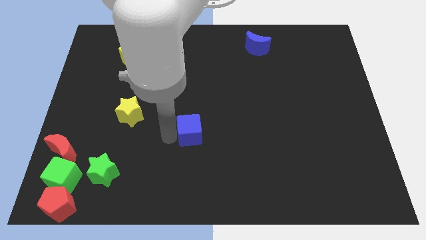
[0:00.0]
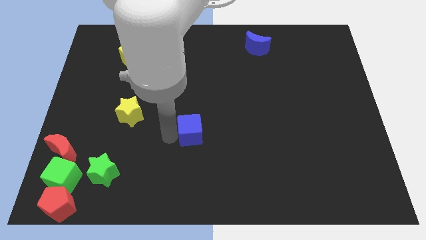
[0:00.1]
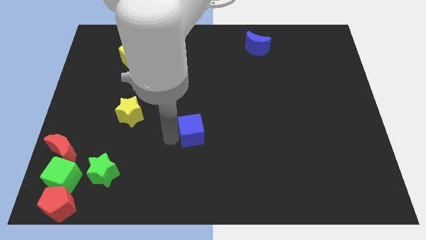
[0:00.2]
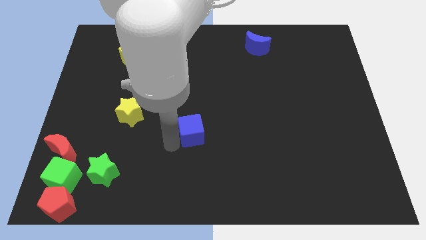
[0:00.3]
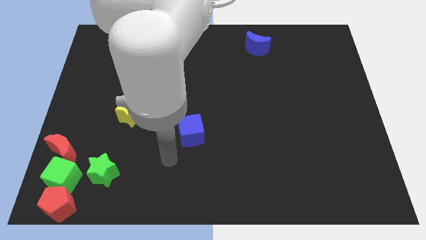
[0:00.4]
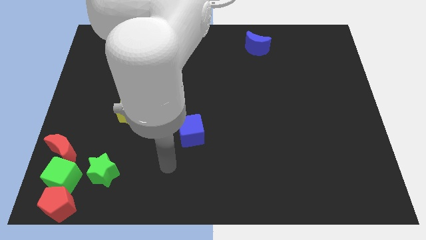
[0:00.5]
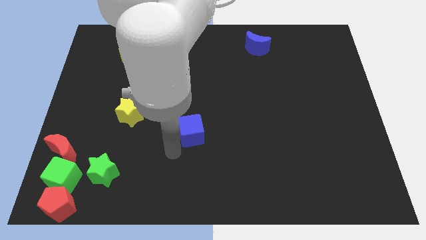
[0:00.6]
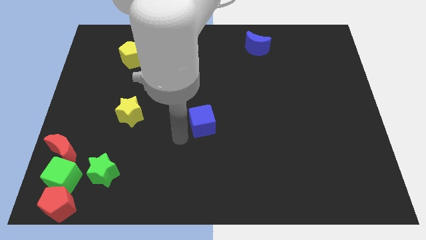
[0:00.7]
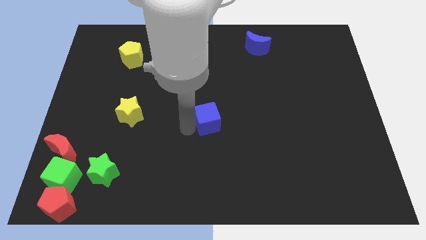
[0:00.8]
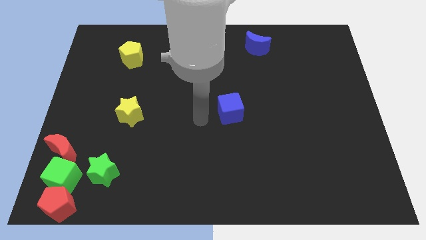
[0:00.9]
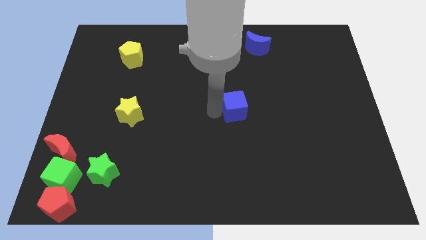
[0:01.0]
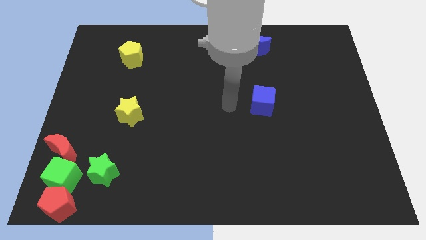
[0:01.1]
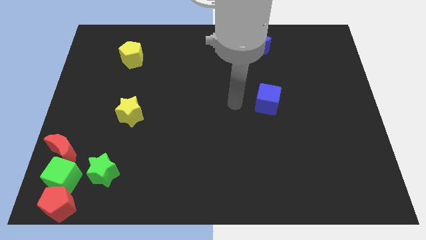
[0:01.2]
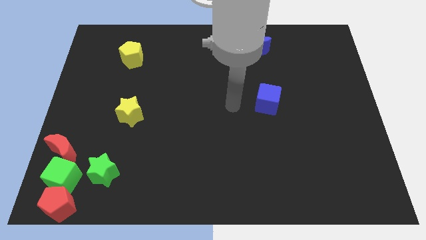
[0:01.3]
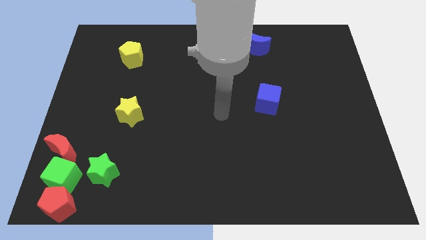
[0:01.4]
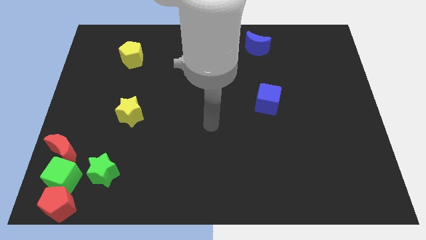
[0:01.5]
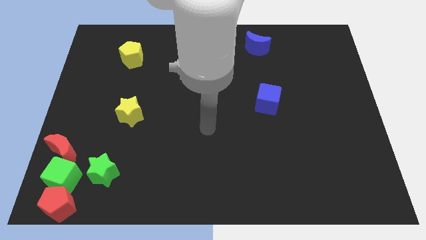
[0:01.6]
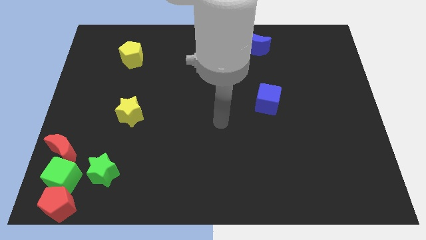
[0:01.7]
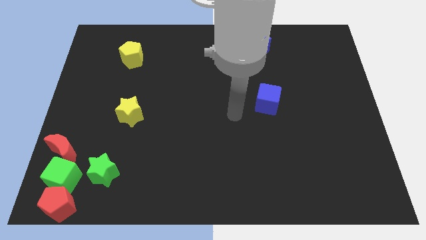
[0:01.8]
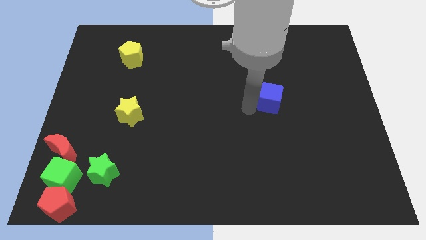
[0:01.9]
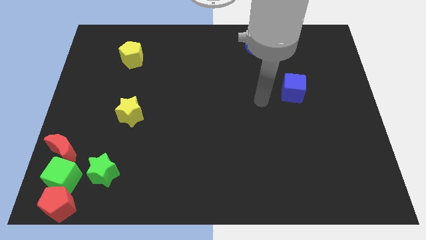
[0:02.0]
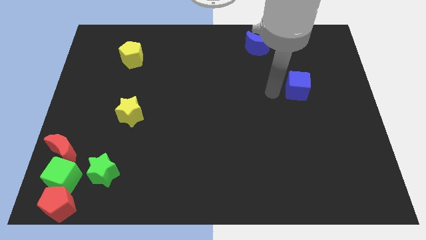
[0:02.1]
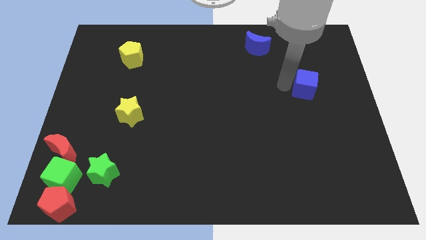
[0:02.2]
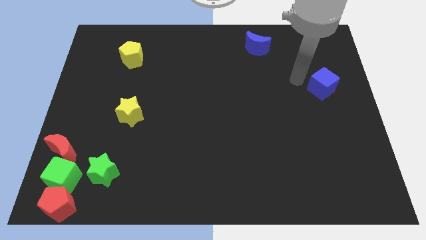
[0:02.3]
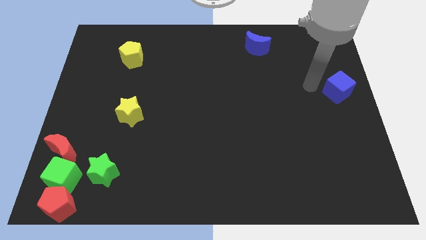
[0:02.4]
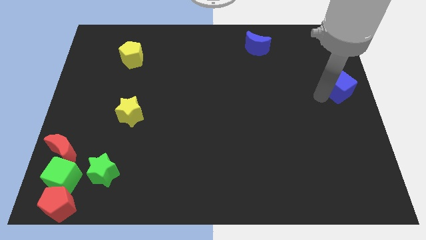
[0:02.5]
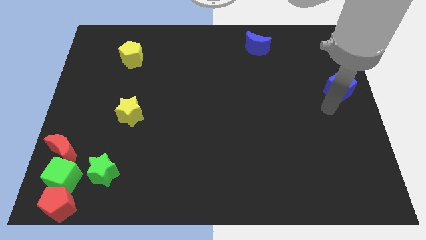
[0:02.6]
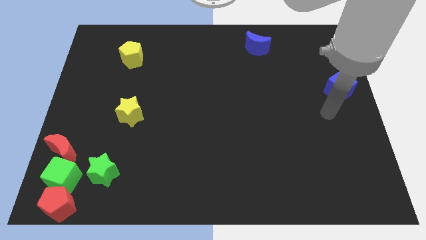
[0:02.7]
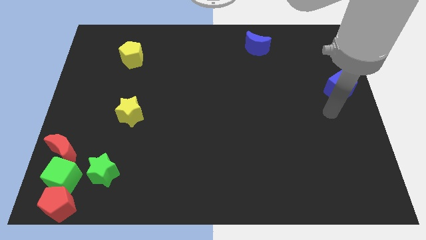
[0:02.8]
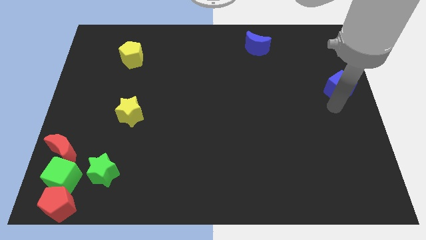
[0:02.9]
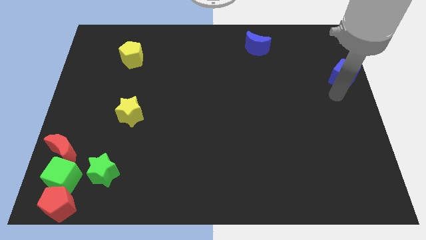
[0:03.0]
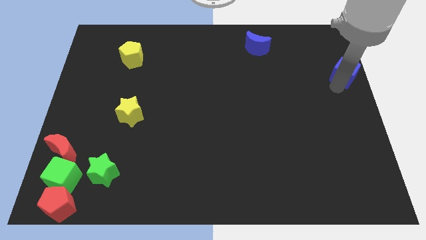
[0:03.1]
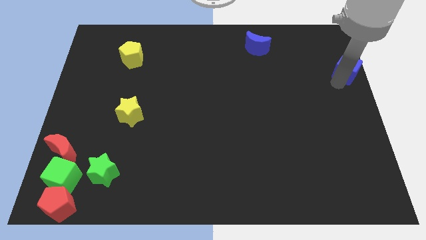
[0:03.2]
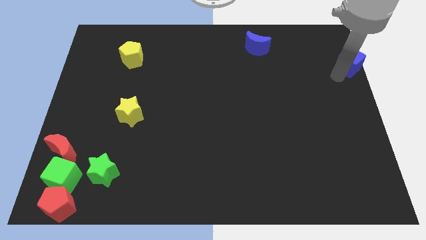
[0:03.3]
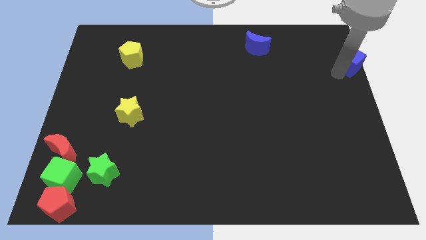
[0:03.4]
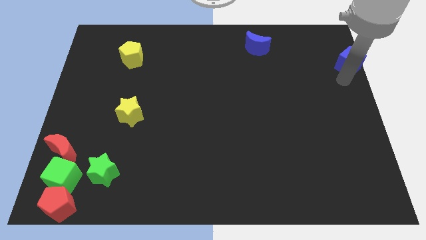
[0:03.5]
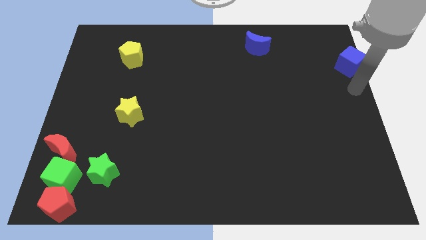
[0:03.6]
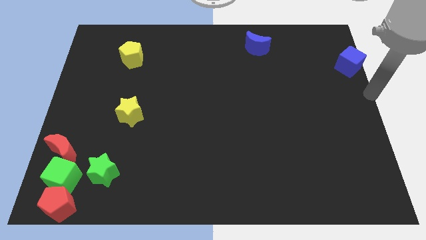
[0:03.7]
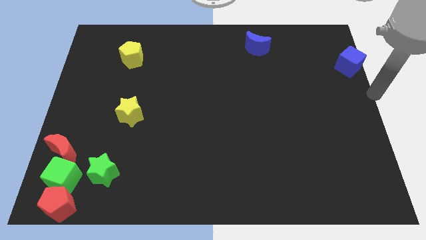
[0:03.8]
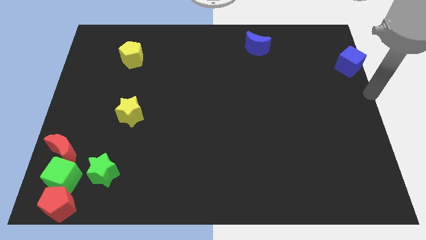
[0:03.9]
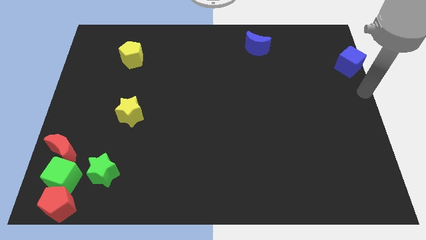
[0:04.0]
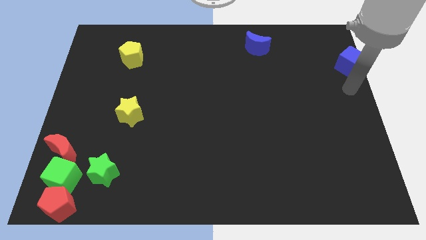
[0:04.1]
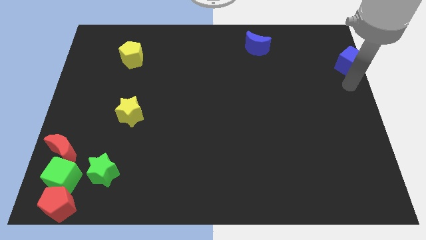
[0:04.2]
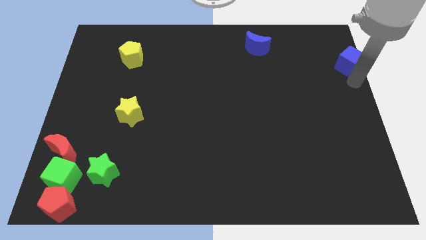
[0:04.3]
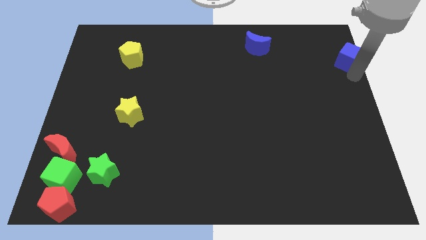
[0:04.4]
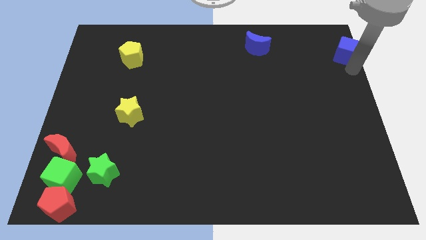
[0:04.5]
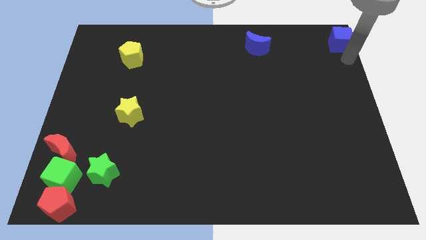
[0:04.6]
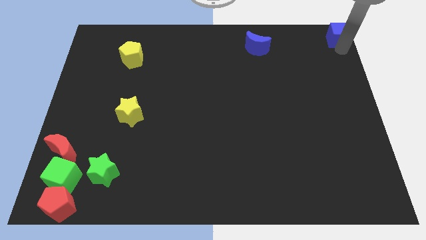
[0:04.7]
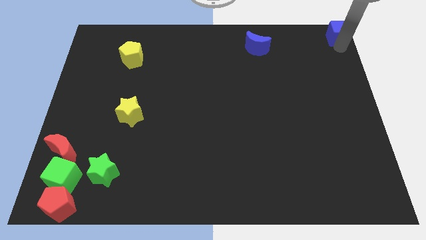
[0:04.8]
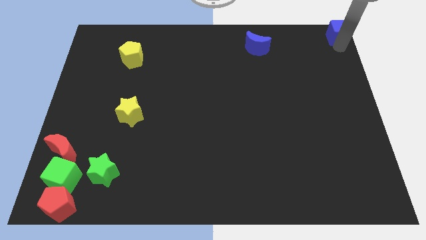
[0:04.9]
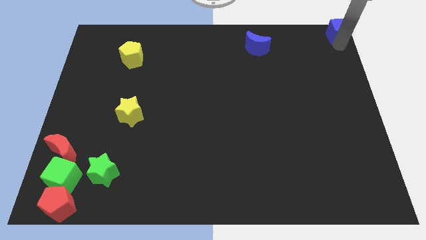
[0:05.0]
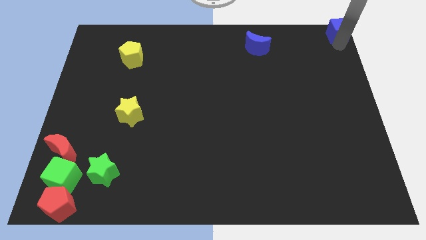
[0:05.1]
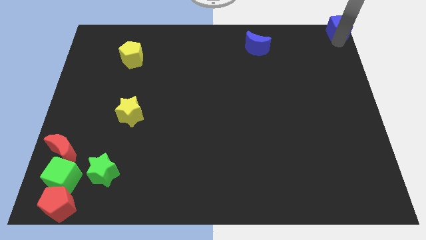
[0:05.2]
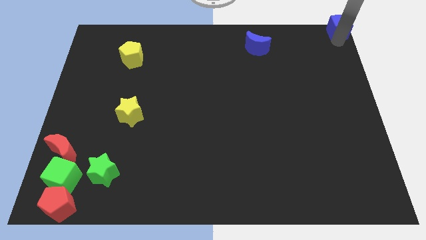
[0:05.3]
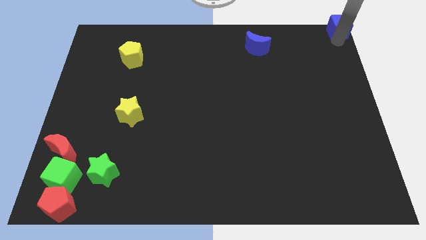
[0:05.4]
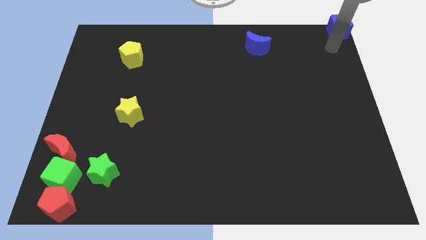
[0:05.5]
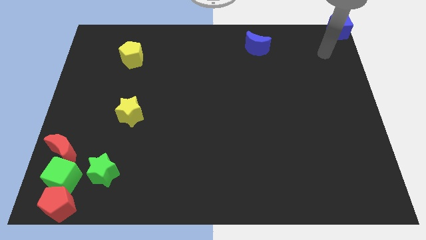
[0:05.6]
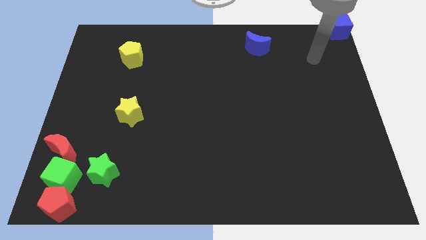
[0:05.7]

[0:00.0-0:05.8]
place blue cube at the top right corner of the board

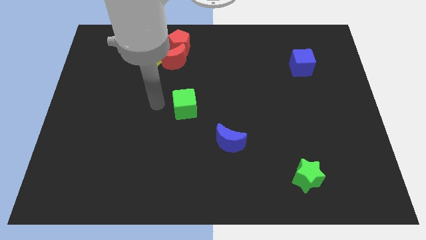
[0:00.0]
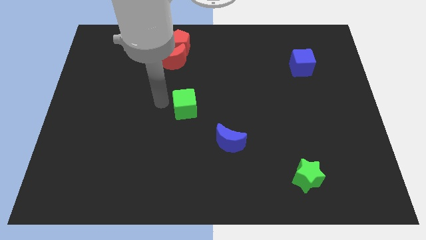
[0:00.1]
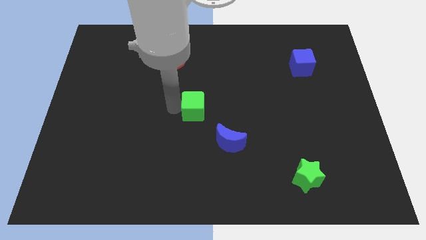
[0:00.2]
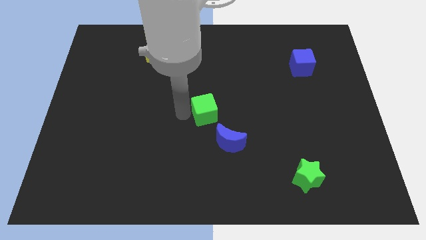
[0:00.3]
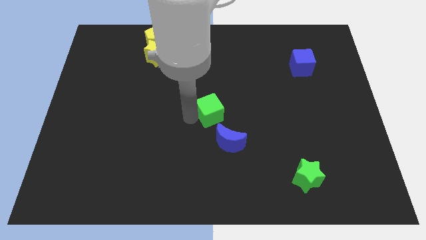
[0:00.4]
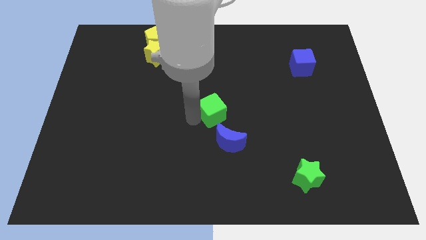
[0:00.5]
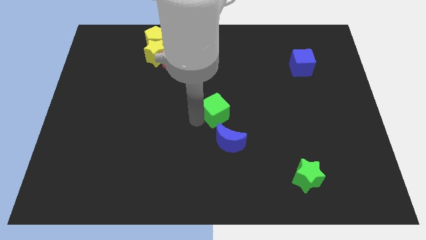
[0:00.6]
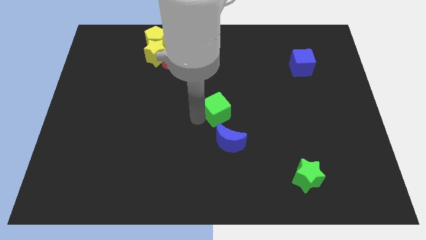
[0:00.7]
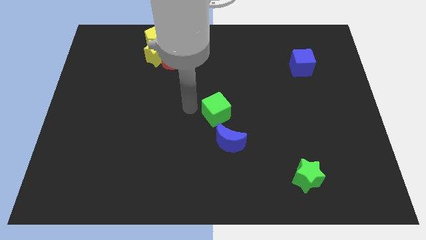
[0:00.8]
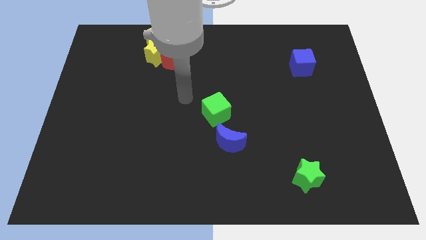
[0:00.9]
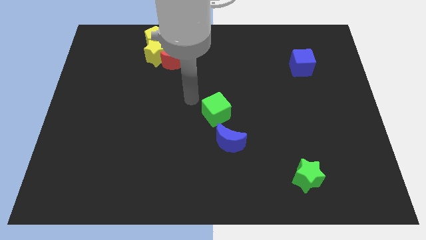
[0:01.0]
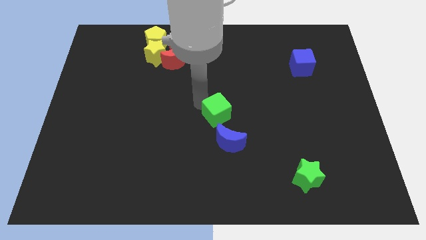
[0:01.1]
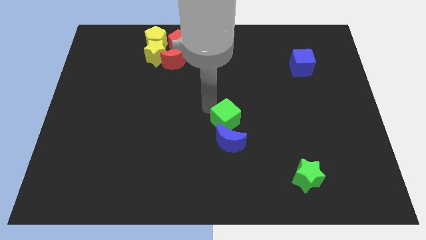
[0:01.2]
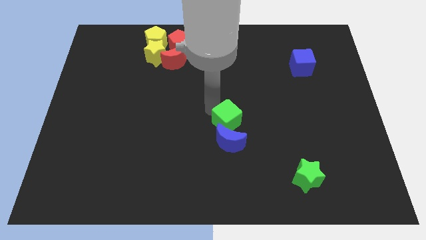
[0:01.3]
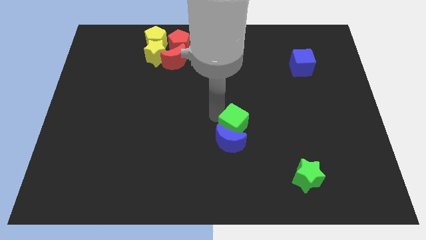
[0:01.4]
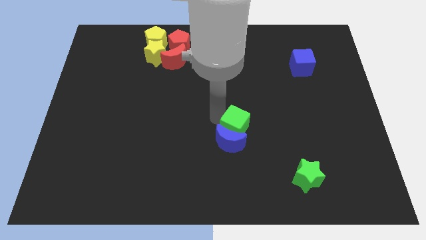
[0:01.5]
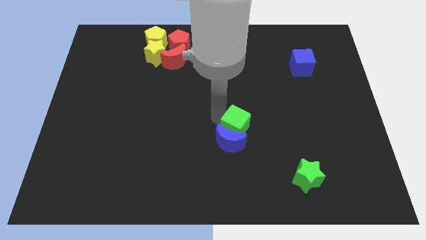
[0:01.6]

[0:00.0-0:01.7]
move the green cube into the blue moon

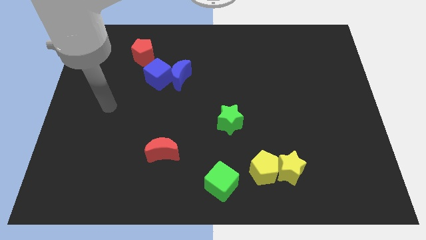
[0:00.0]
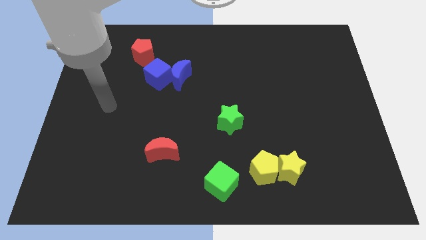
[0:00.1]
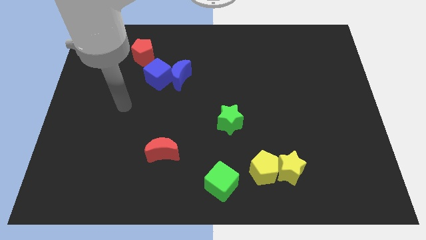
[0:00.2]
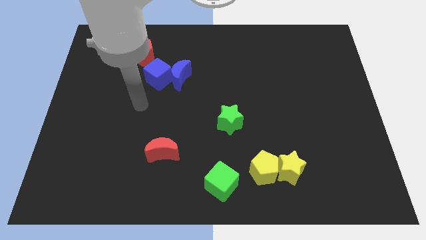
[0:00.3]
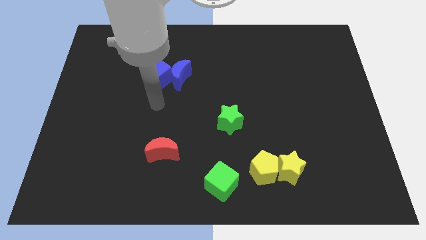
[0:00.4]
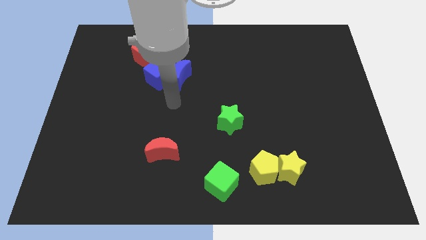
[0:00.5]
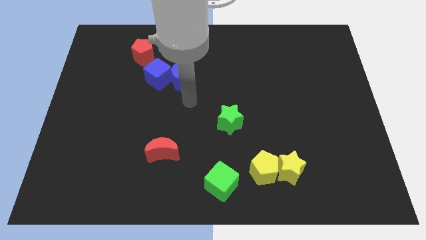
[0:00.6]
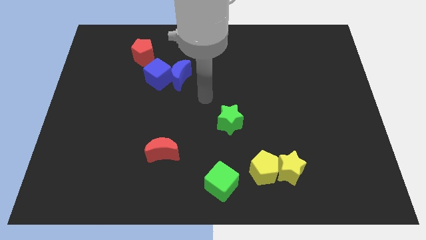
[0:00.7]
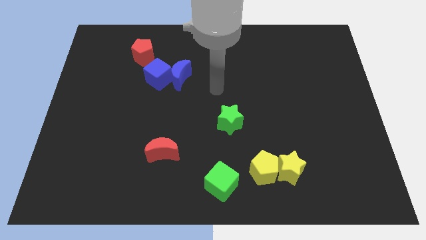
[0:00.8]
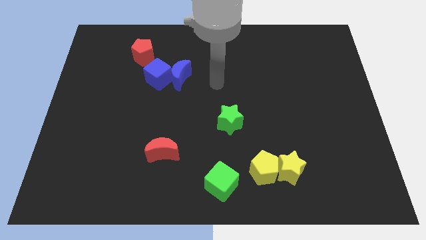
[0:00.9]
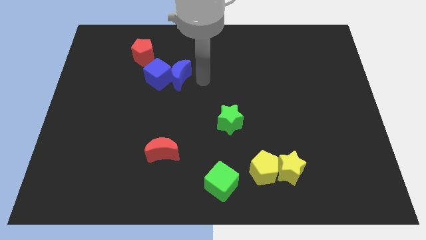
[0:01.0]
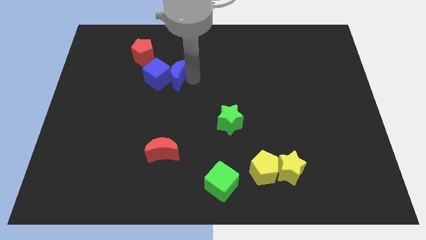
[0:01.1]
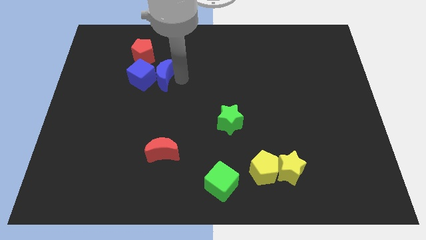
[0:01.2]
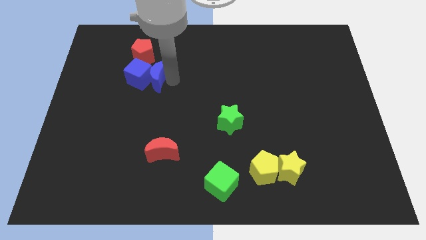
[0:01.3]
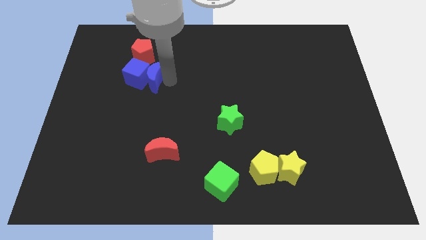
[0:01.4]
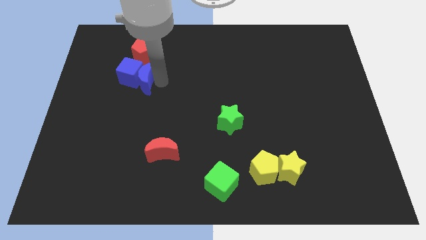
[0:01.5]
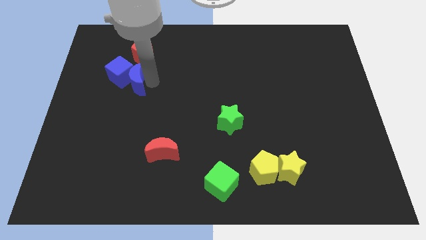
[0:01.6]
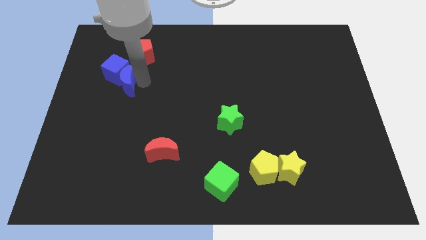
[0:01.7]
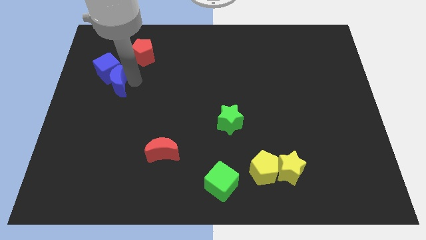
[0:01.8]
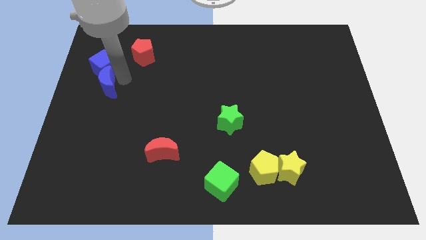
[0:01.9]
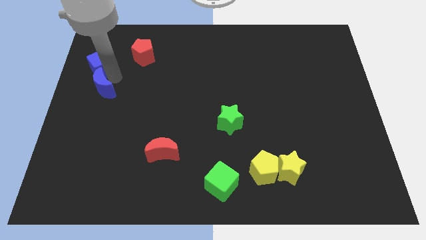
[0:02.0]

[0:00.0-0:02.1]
separate the blue blocks from the red pentagon
